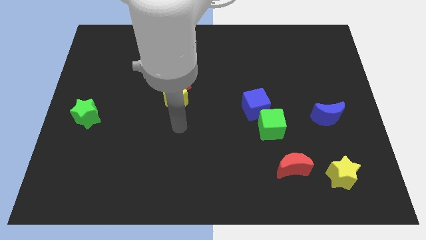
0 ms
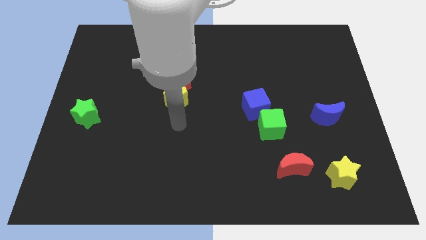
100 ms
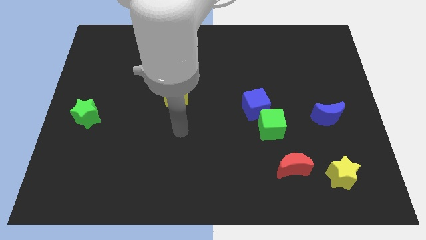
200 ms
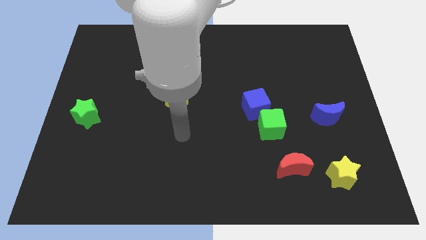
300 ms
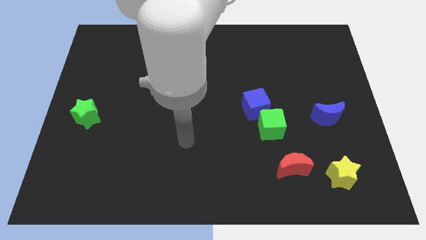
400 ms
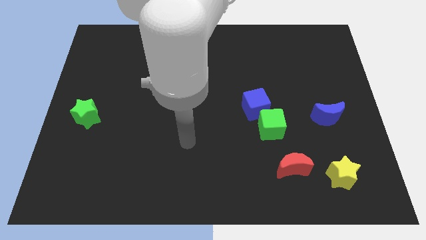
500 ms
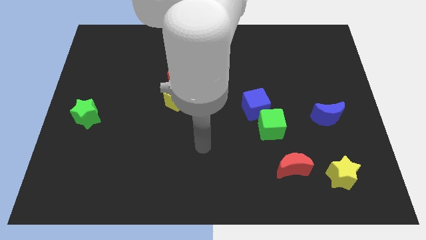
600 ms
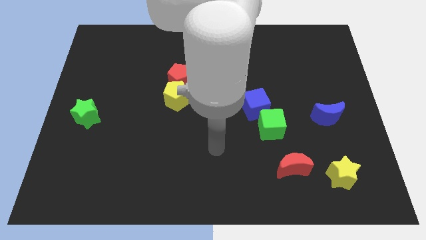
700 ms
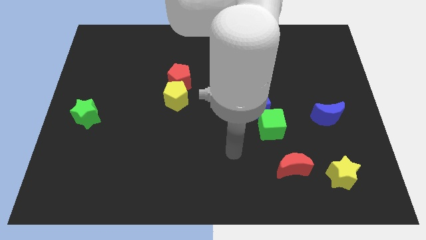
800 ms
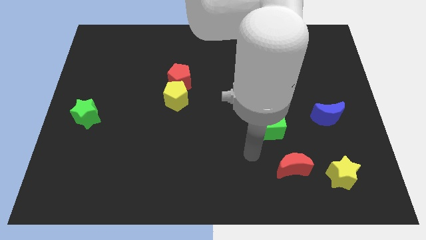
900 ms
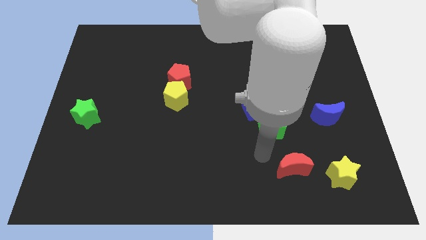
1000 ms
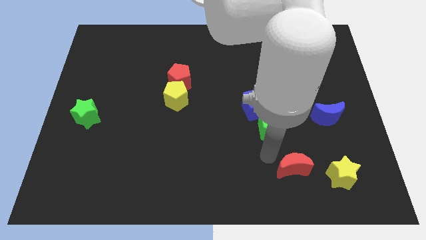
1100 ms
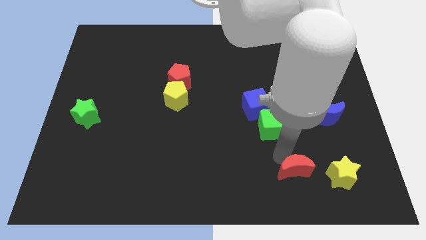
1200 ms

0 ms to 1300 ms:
move your arm towards the green cube

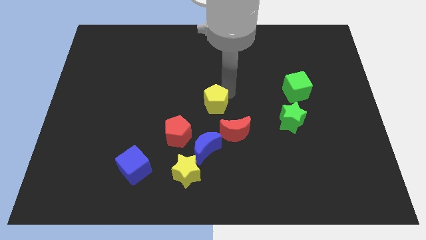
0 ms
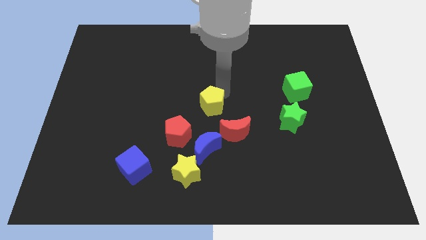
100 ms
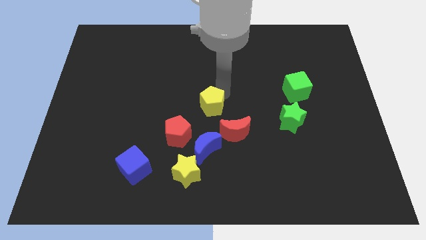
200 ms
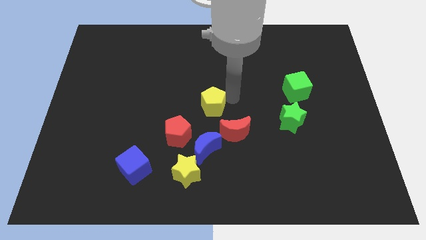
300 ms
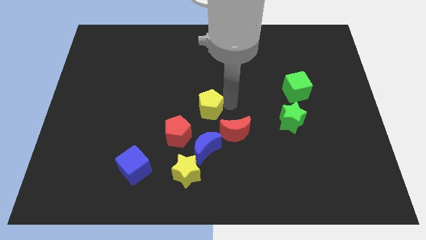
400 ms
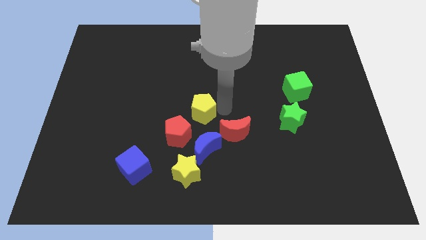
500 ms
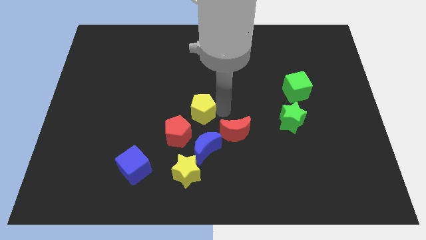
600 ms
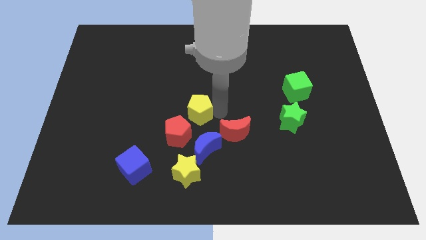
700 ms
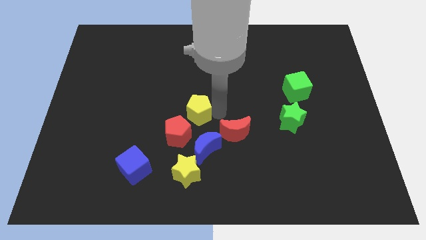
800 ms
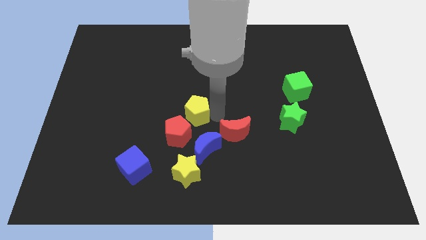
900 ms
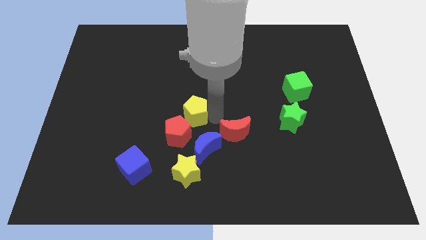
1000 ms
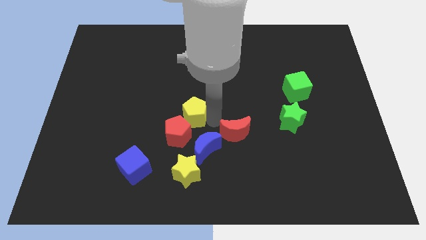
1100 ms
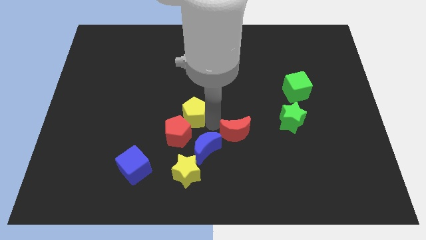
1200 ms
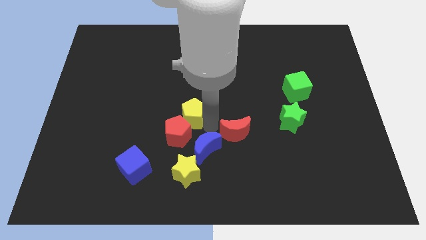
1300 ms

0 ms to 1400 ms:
push the yellow pentagon into the red pentagon

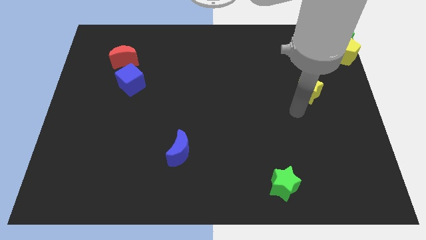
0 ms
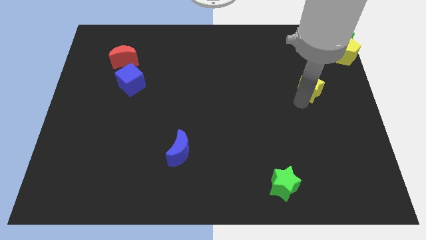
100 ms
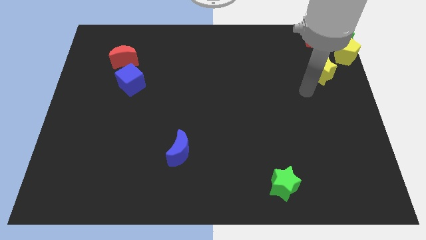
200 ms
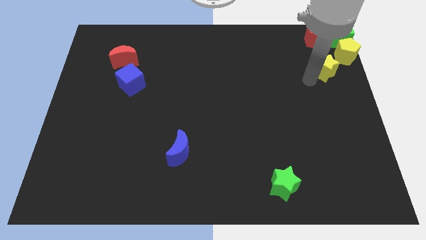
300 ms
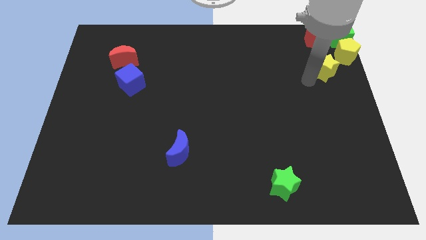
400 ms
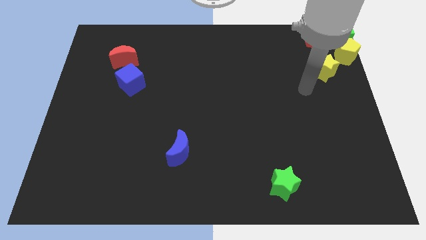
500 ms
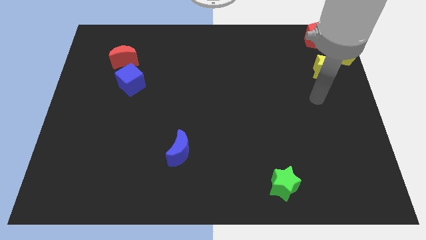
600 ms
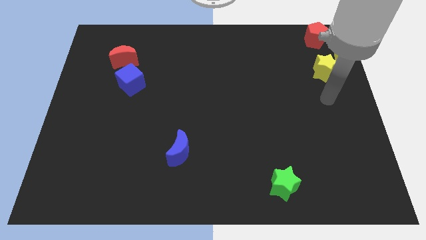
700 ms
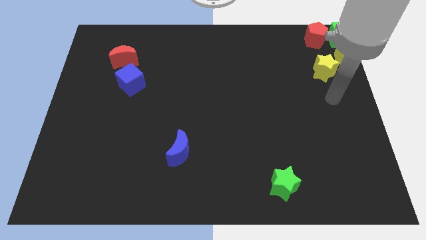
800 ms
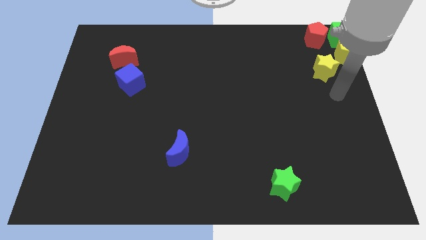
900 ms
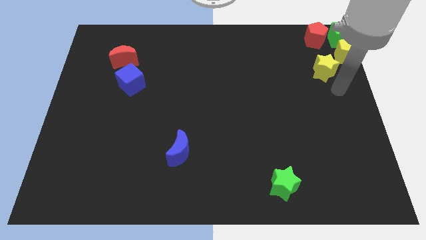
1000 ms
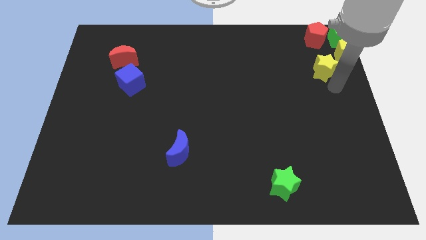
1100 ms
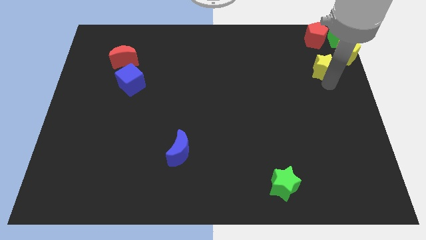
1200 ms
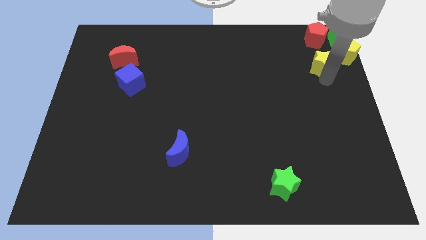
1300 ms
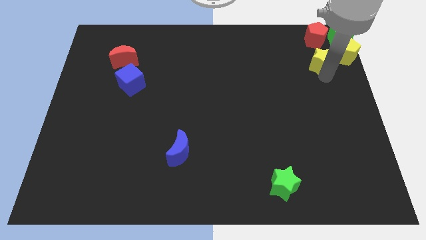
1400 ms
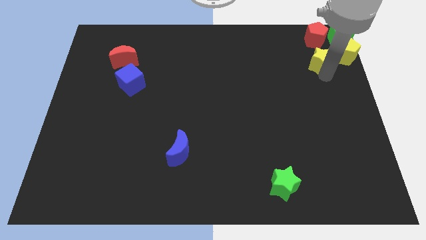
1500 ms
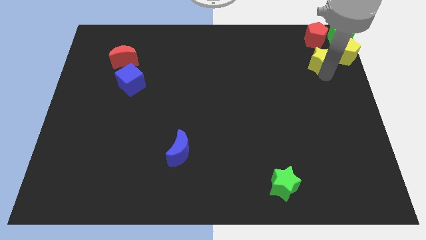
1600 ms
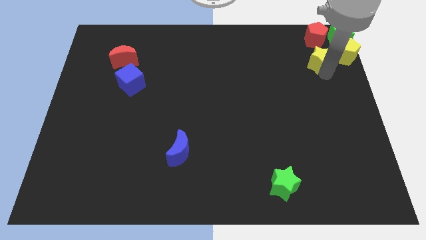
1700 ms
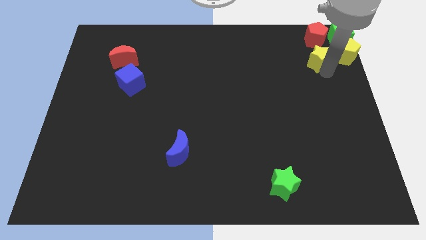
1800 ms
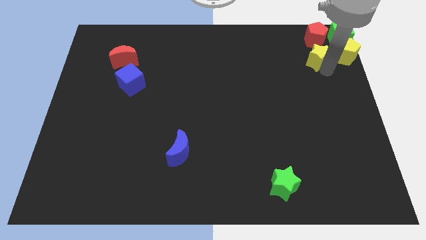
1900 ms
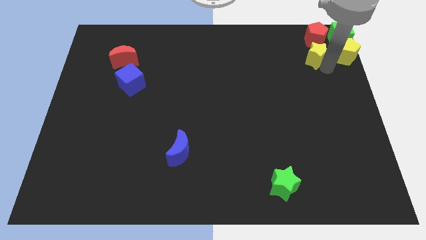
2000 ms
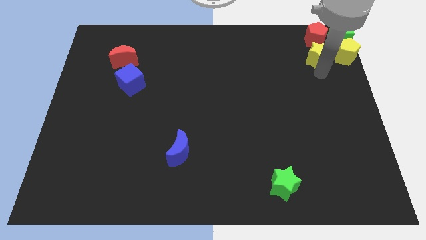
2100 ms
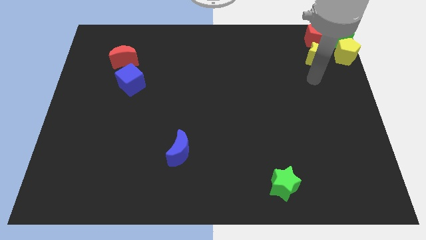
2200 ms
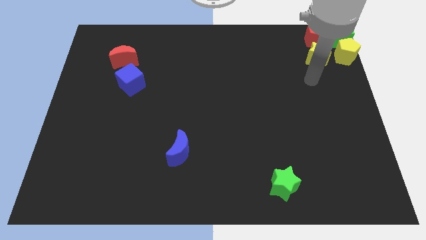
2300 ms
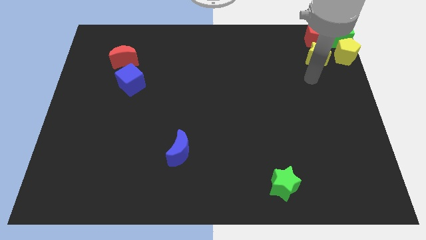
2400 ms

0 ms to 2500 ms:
place the yellow star below the red pentagon

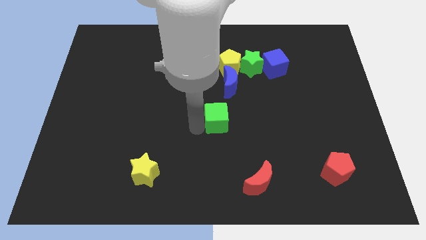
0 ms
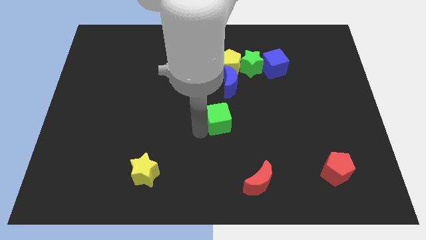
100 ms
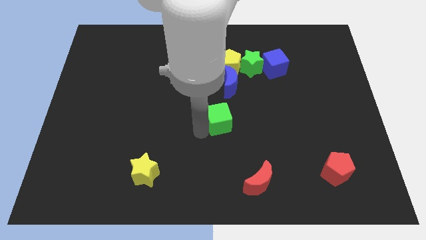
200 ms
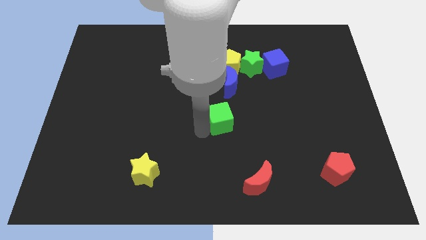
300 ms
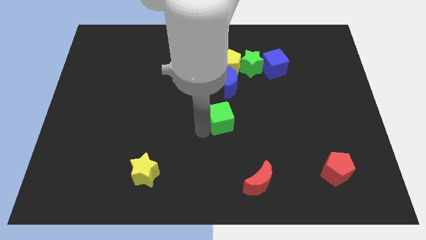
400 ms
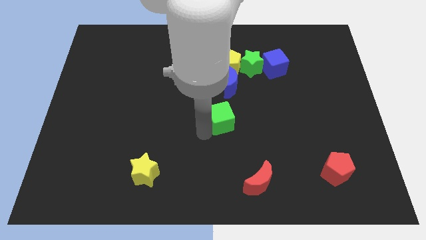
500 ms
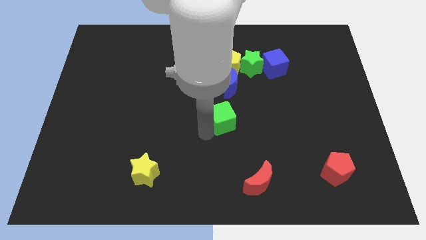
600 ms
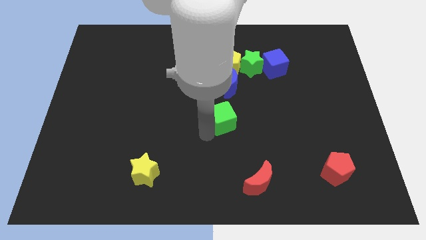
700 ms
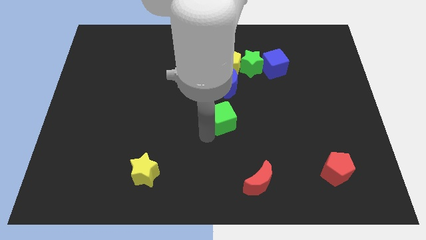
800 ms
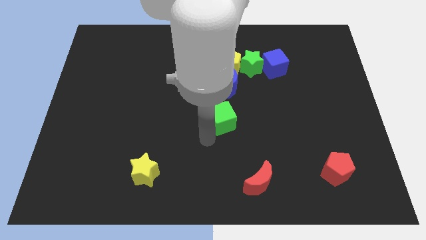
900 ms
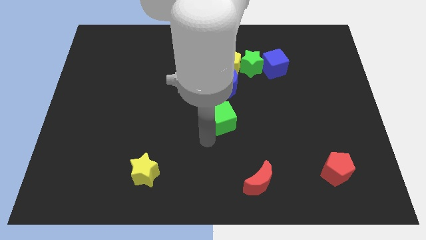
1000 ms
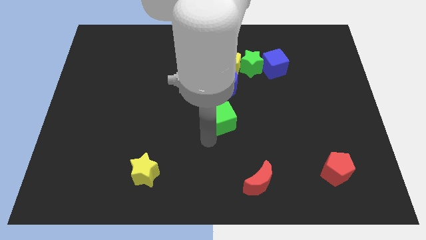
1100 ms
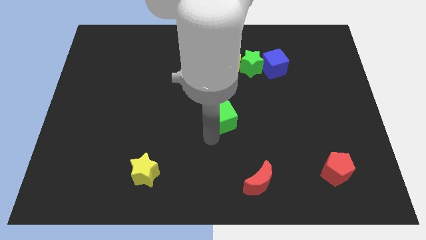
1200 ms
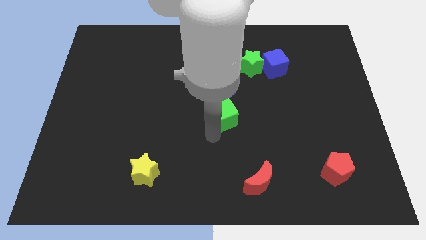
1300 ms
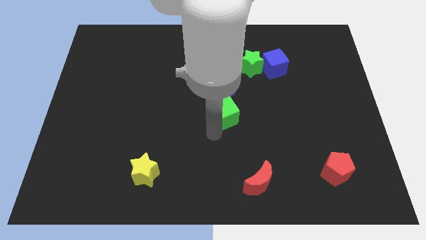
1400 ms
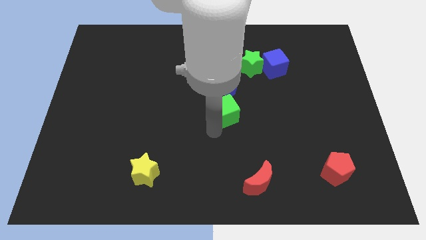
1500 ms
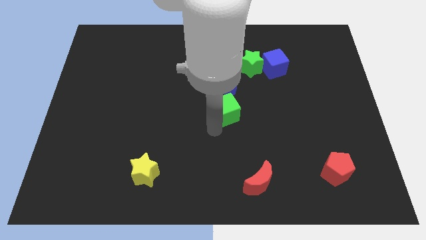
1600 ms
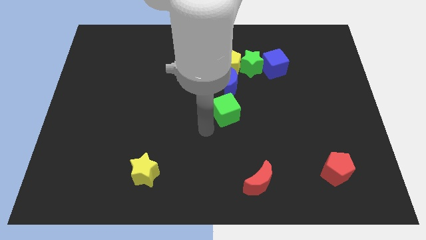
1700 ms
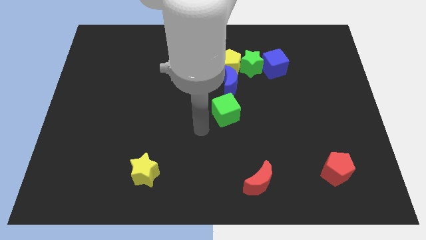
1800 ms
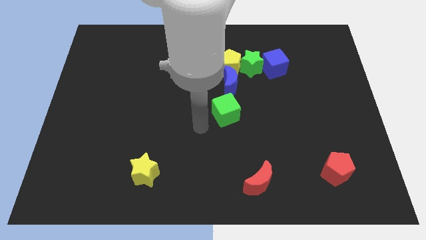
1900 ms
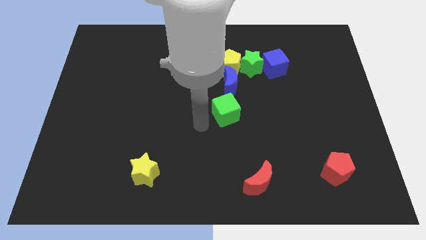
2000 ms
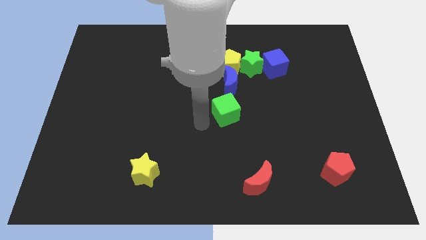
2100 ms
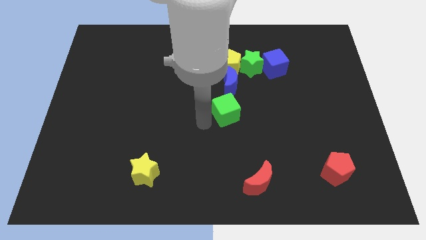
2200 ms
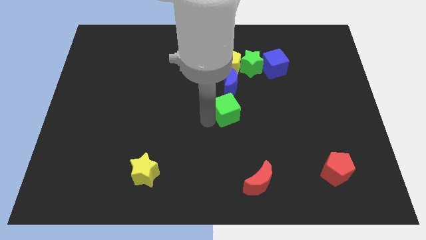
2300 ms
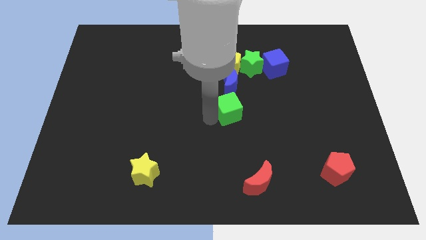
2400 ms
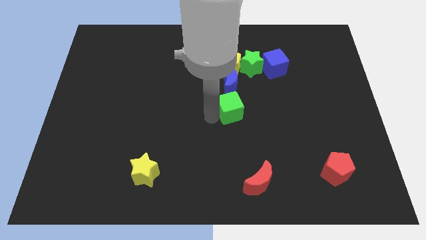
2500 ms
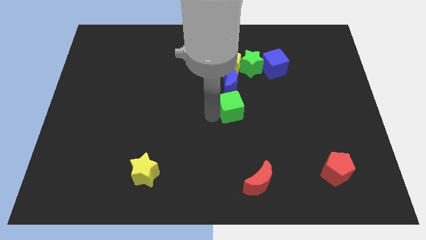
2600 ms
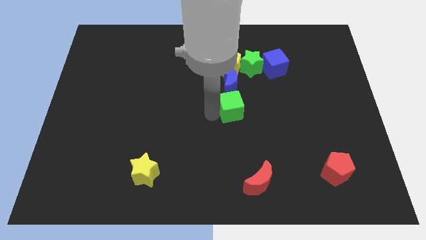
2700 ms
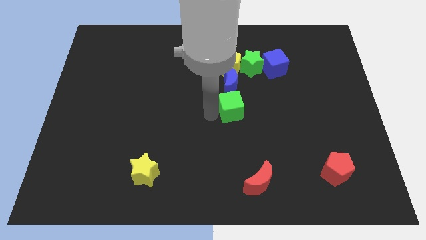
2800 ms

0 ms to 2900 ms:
move the green cube to the bottom of the blue crescent

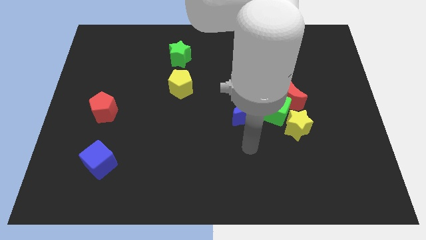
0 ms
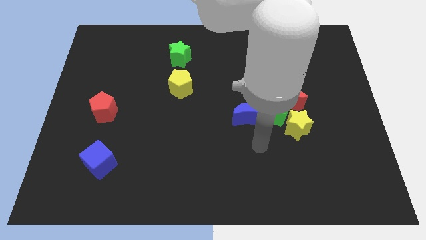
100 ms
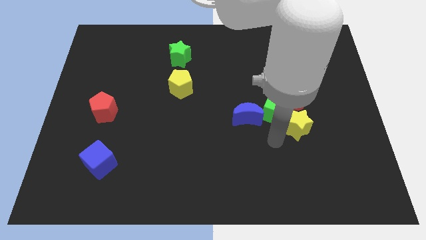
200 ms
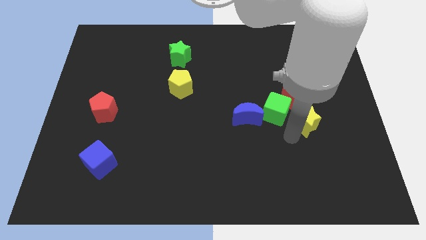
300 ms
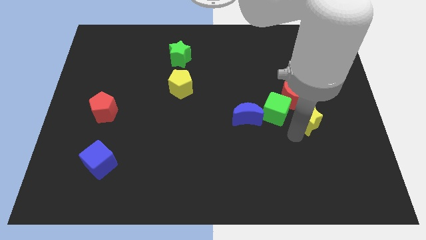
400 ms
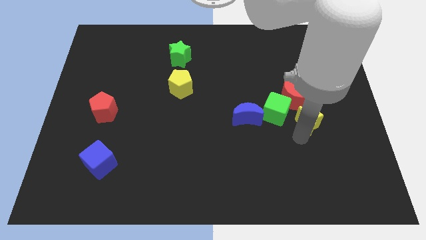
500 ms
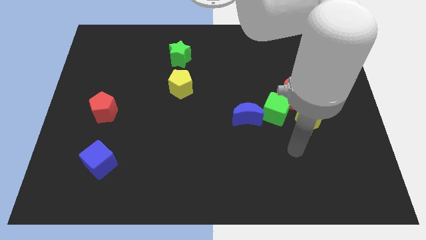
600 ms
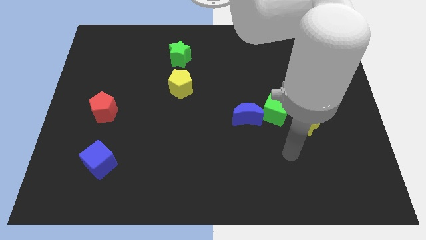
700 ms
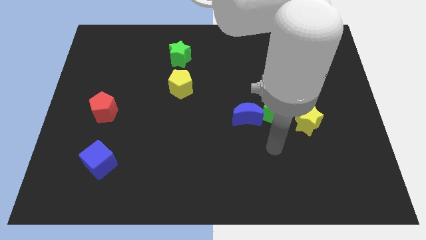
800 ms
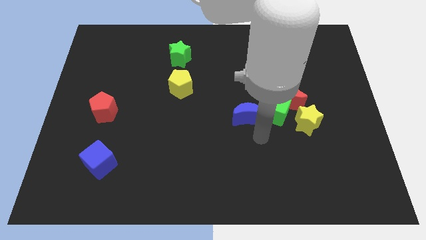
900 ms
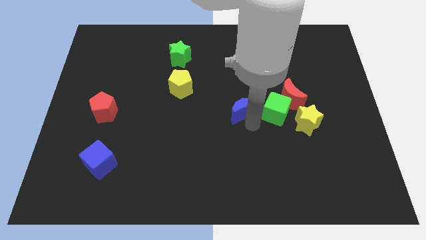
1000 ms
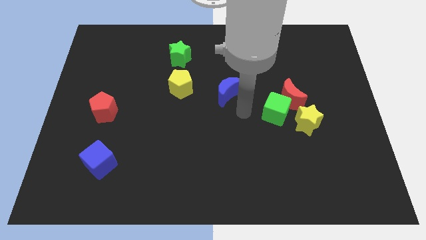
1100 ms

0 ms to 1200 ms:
push the yellow star diagonal to the right side of the green cube
